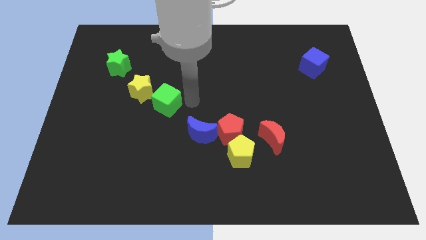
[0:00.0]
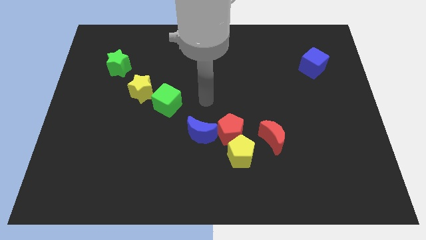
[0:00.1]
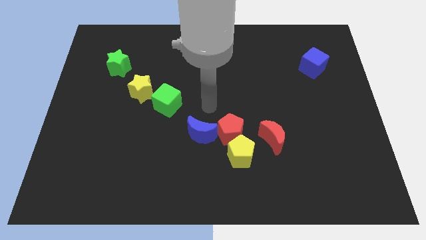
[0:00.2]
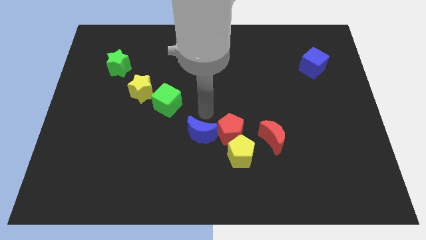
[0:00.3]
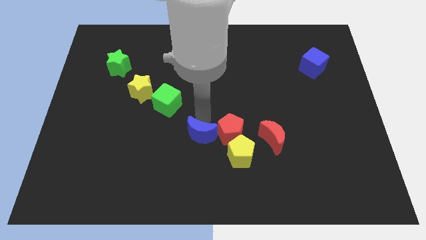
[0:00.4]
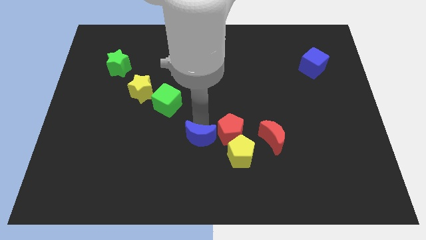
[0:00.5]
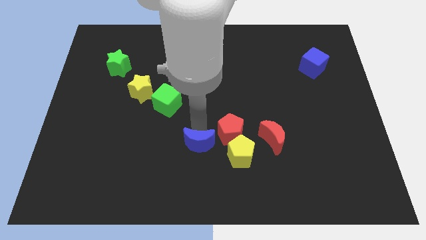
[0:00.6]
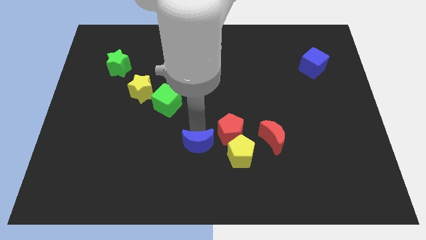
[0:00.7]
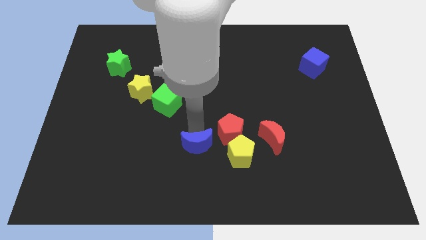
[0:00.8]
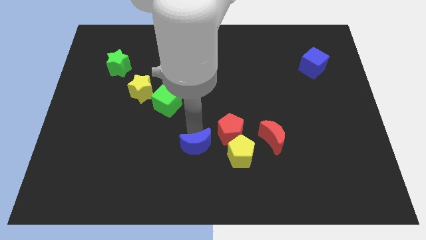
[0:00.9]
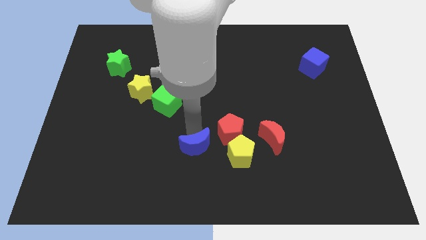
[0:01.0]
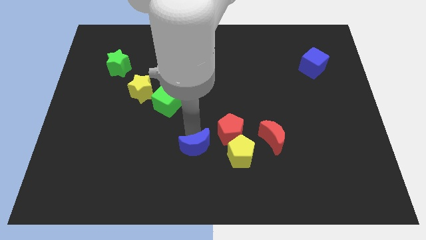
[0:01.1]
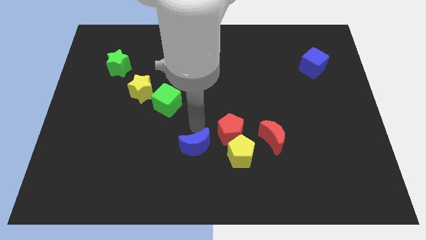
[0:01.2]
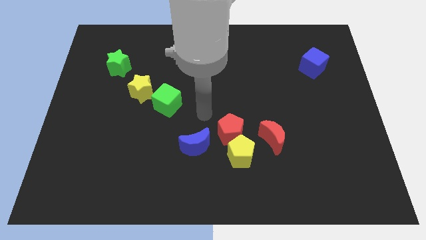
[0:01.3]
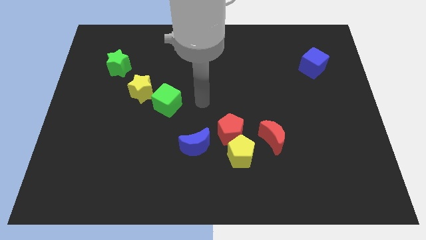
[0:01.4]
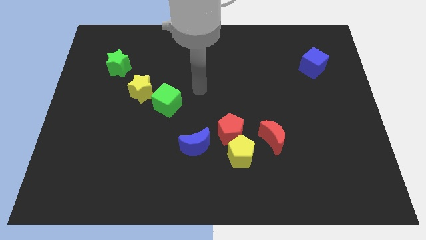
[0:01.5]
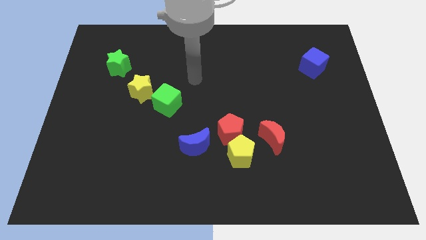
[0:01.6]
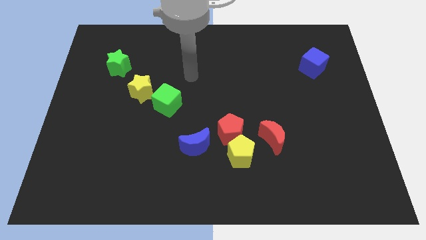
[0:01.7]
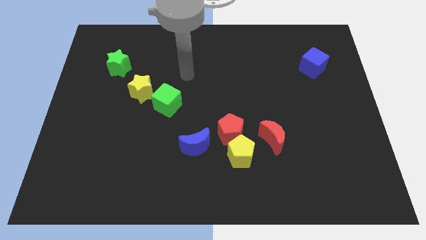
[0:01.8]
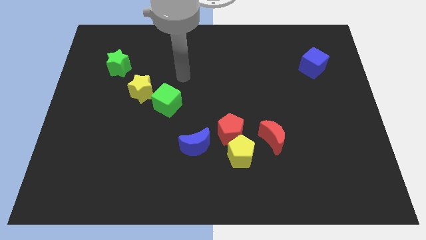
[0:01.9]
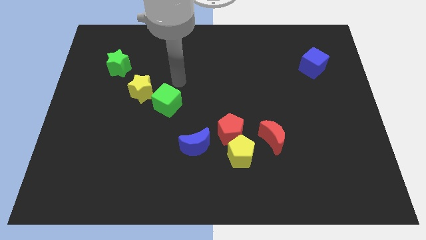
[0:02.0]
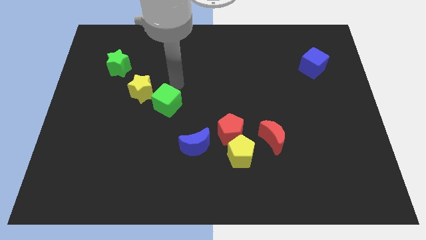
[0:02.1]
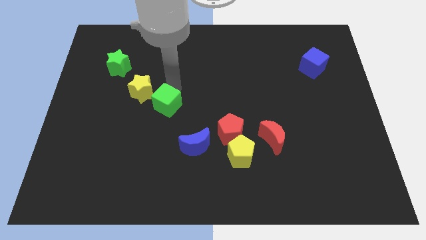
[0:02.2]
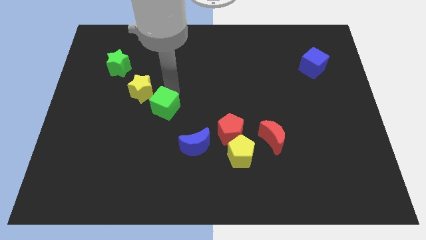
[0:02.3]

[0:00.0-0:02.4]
slide the blue moon down slightly

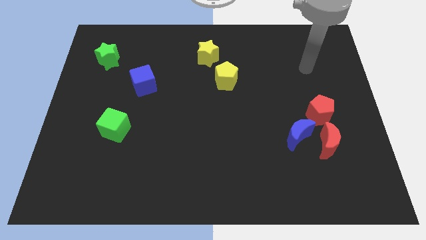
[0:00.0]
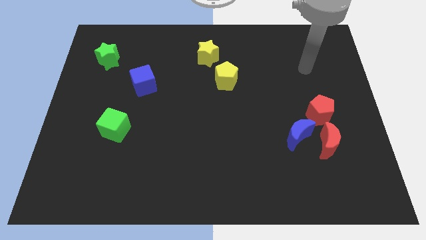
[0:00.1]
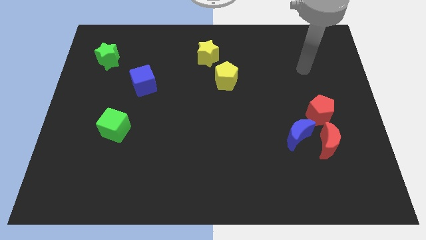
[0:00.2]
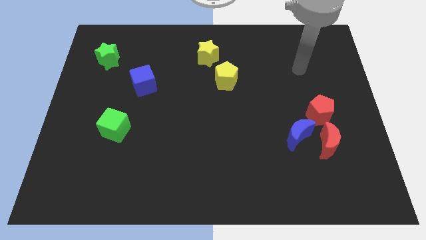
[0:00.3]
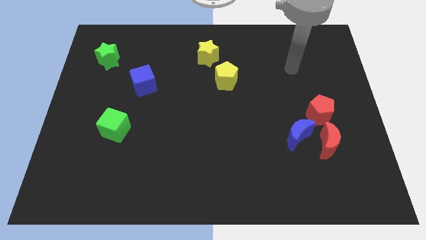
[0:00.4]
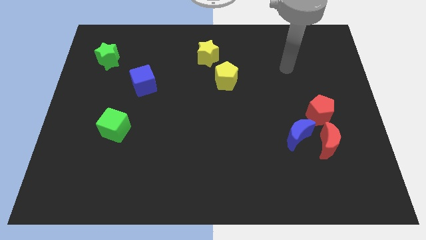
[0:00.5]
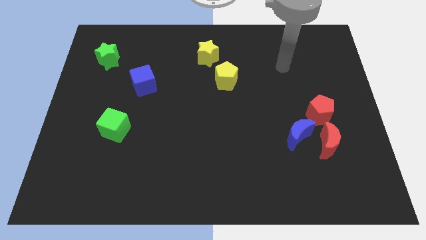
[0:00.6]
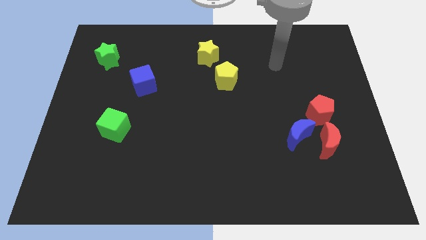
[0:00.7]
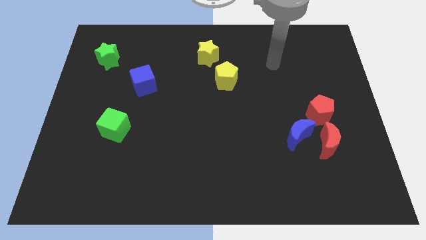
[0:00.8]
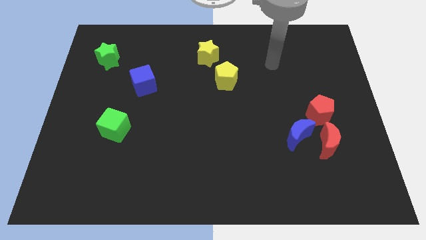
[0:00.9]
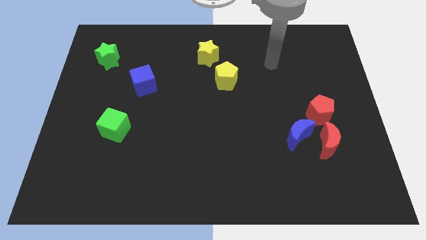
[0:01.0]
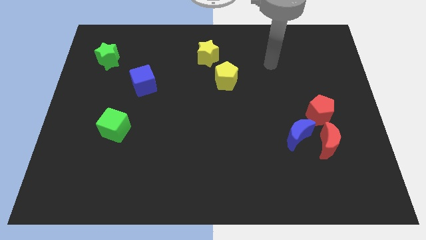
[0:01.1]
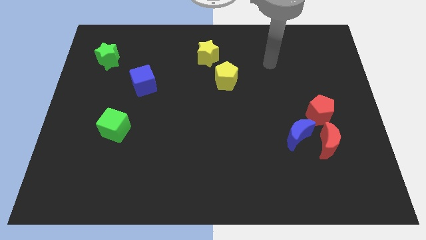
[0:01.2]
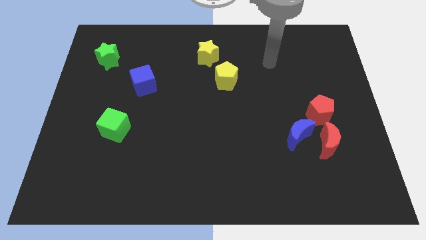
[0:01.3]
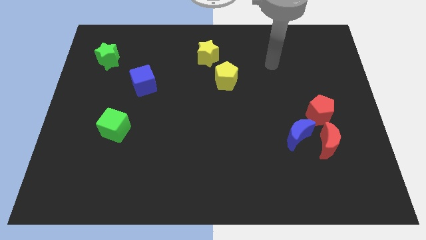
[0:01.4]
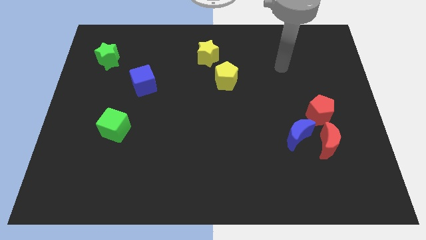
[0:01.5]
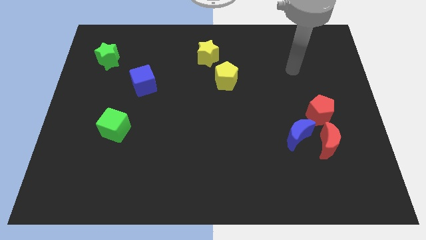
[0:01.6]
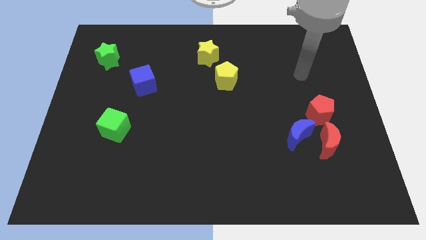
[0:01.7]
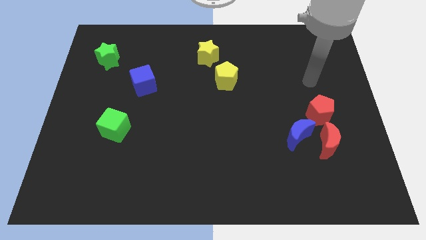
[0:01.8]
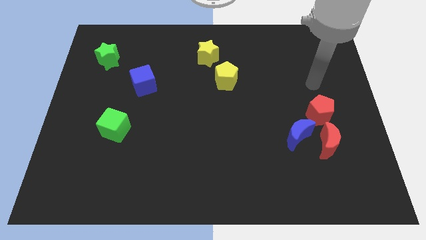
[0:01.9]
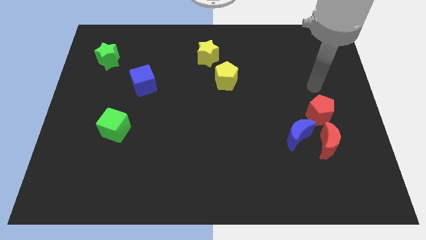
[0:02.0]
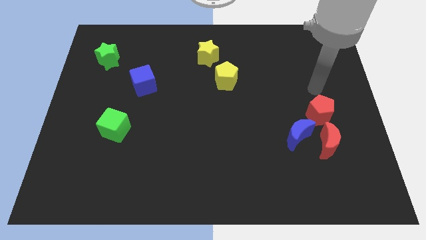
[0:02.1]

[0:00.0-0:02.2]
move your arm towards the top of the red pentagon

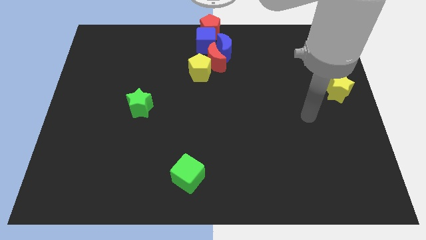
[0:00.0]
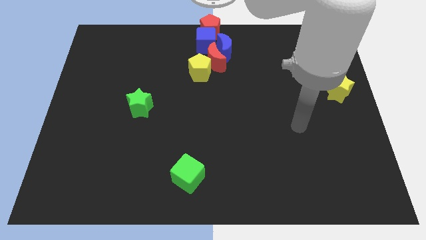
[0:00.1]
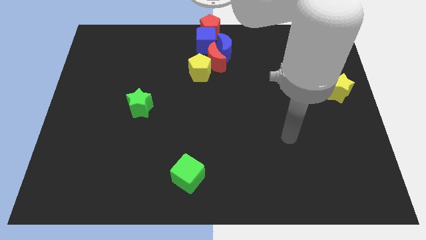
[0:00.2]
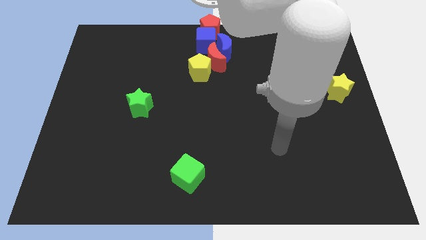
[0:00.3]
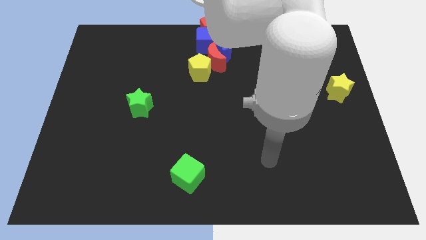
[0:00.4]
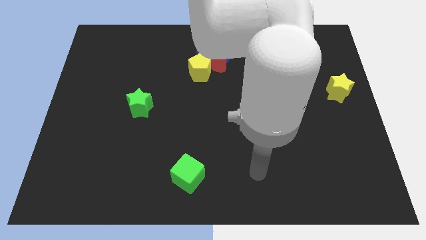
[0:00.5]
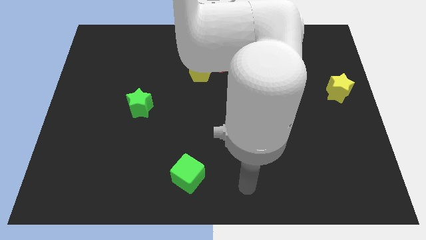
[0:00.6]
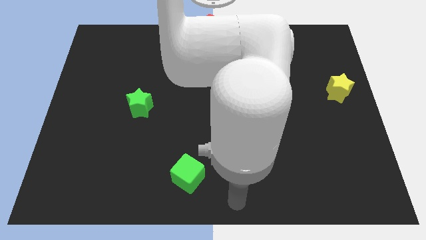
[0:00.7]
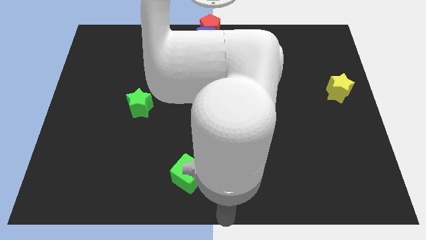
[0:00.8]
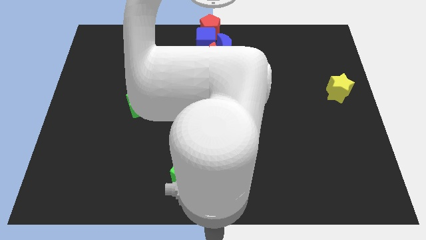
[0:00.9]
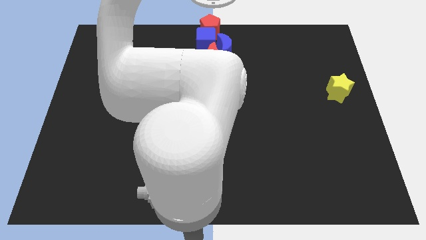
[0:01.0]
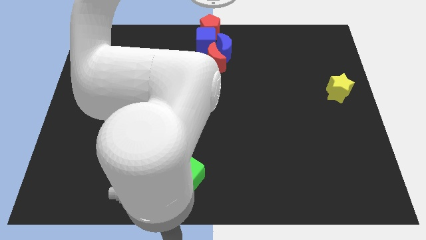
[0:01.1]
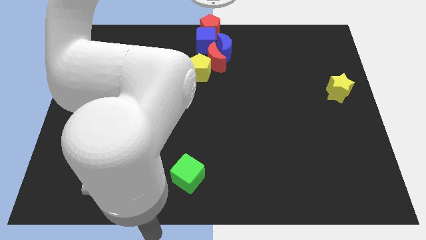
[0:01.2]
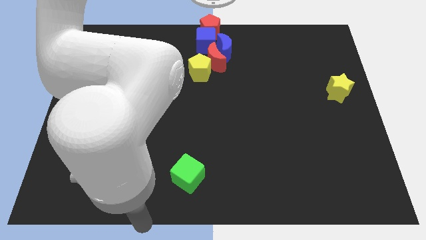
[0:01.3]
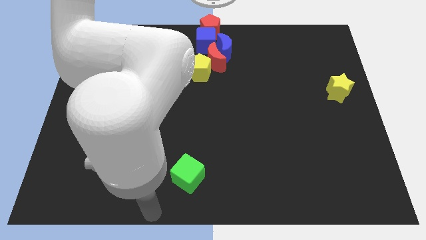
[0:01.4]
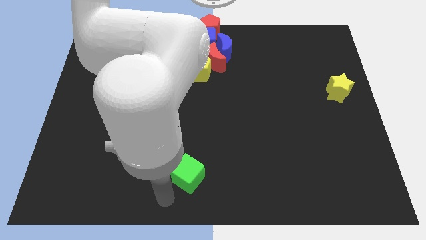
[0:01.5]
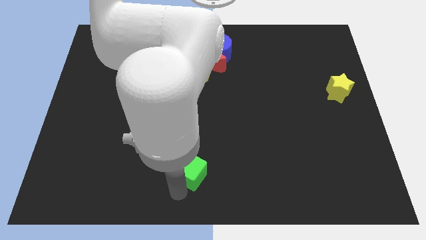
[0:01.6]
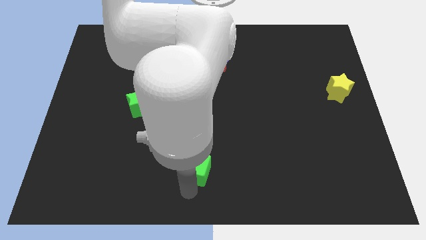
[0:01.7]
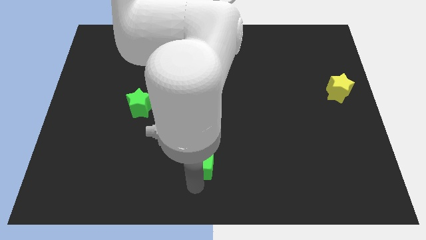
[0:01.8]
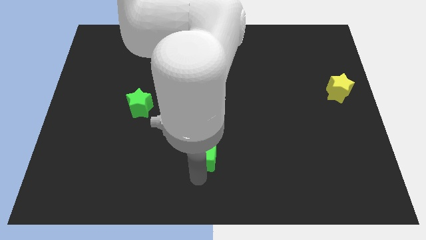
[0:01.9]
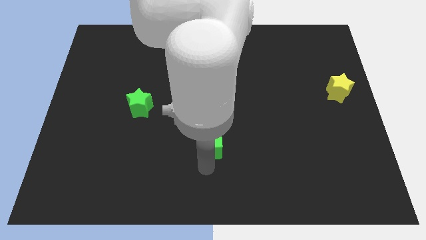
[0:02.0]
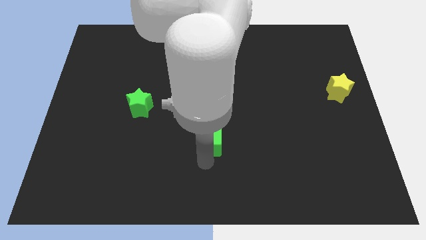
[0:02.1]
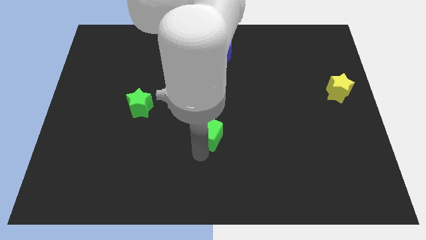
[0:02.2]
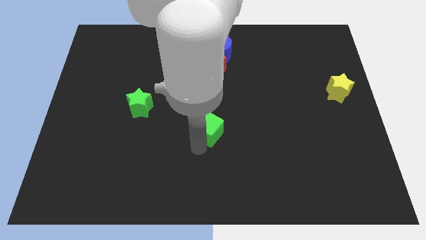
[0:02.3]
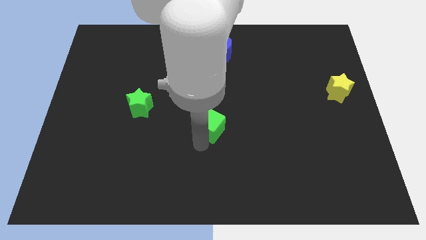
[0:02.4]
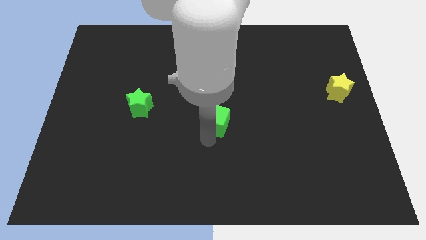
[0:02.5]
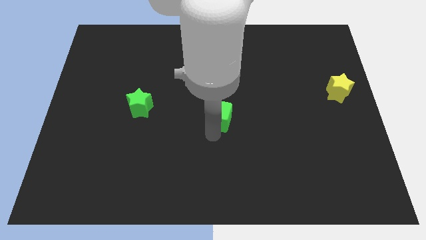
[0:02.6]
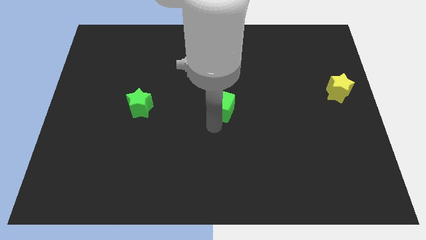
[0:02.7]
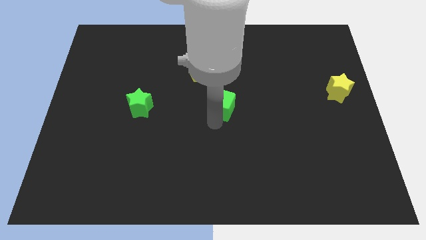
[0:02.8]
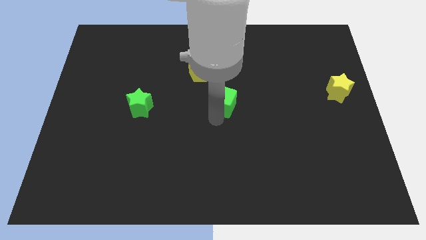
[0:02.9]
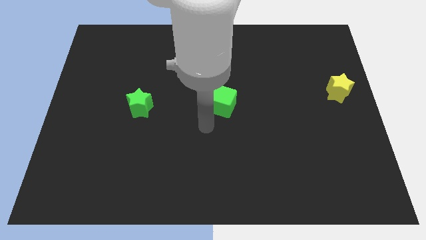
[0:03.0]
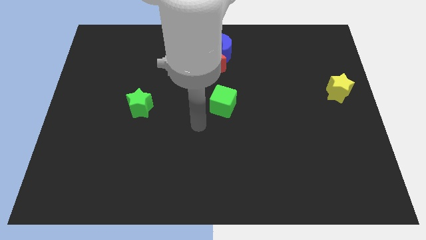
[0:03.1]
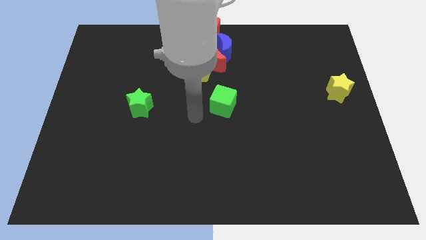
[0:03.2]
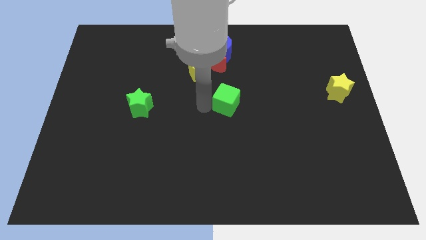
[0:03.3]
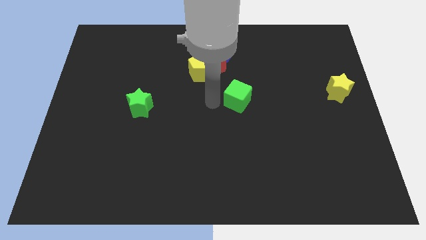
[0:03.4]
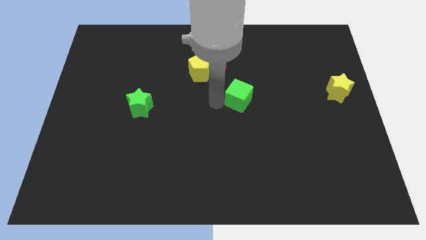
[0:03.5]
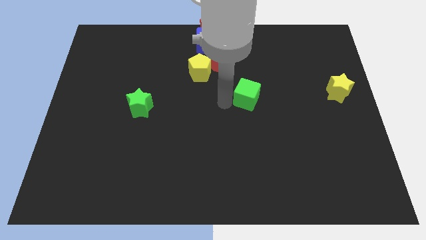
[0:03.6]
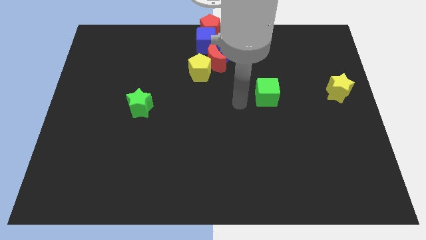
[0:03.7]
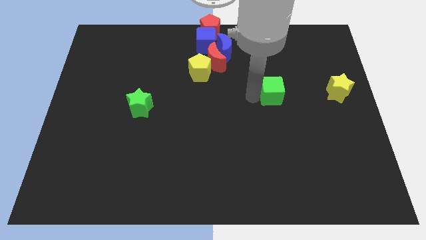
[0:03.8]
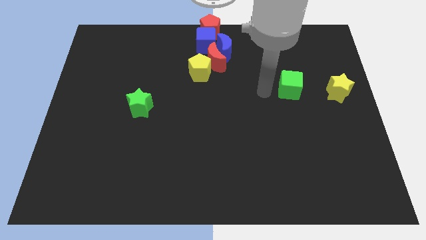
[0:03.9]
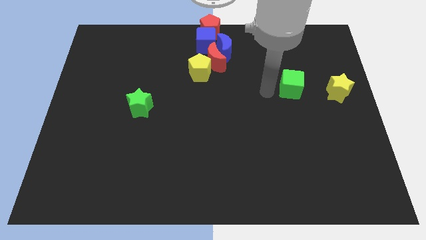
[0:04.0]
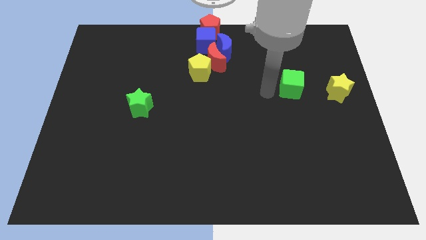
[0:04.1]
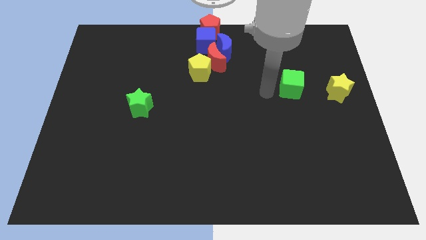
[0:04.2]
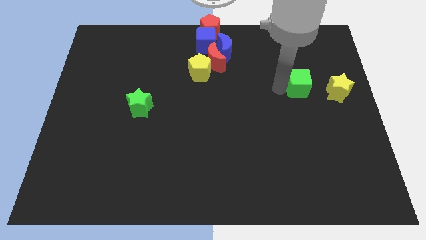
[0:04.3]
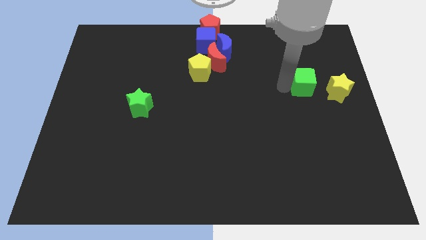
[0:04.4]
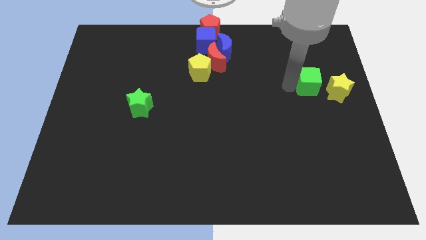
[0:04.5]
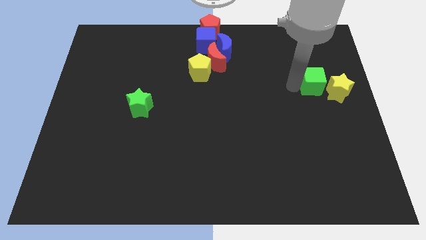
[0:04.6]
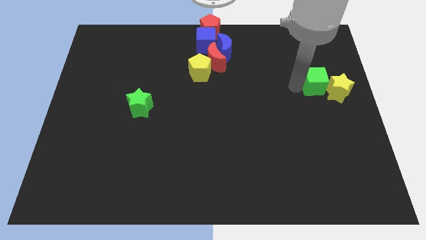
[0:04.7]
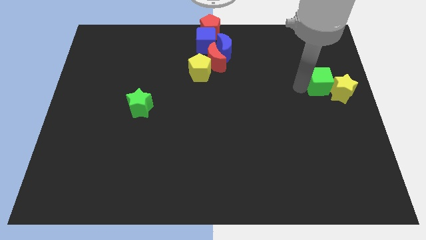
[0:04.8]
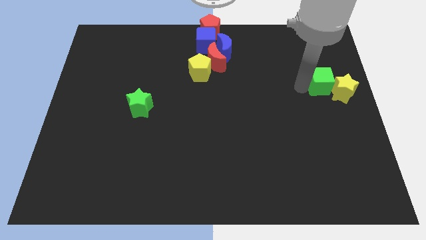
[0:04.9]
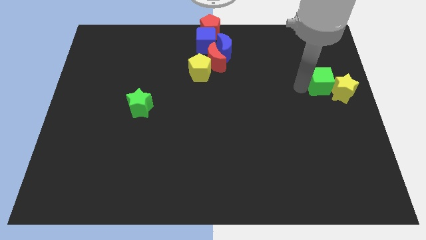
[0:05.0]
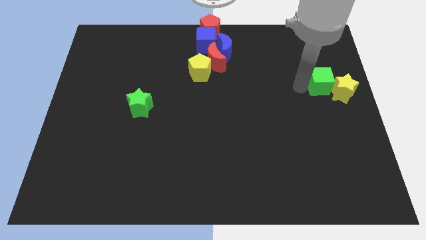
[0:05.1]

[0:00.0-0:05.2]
push the green cube into the yellow star
